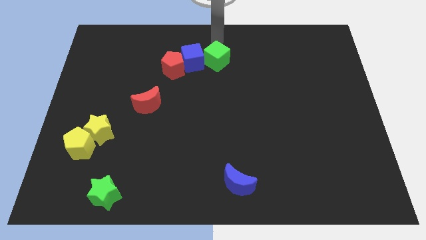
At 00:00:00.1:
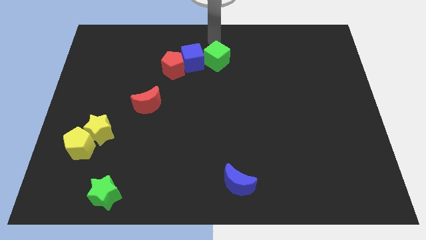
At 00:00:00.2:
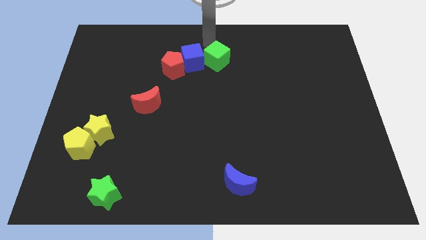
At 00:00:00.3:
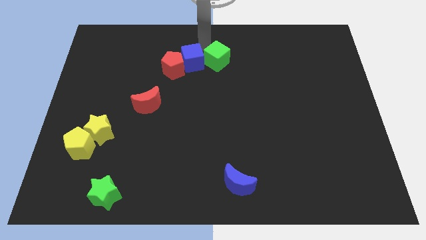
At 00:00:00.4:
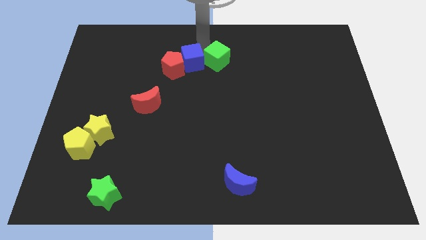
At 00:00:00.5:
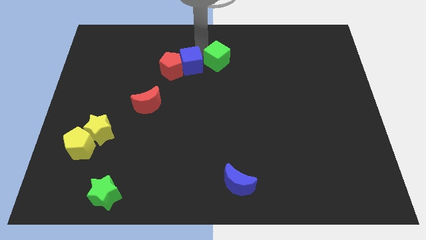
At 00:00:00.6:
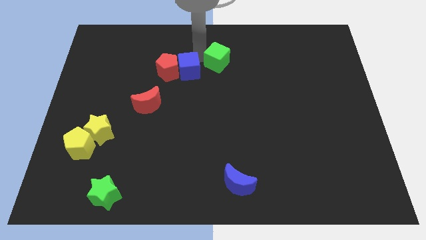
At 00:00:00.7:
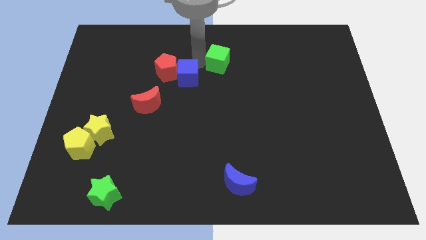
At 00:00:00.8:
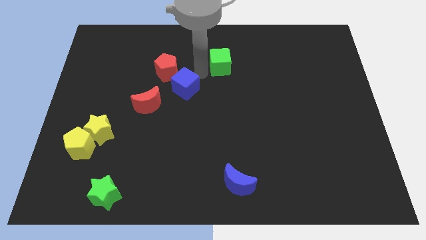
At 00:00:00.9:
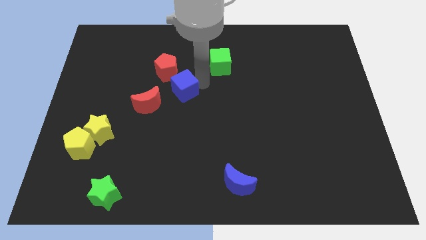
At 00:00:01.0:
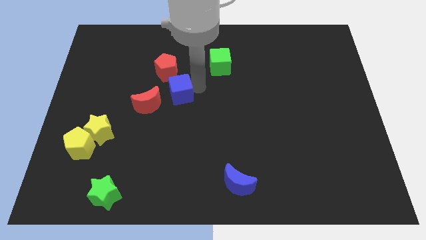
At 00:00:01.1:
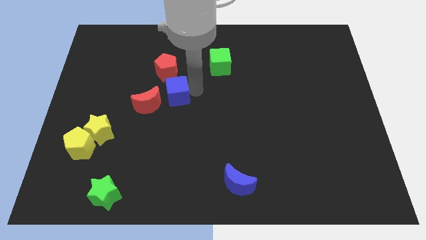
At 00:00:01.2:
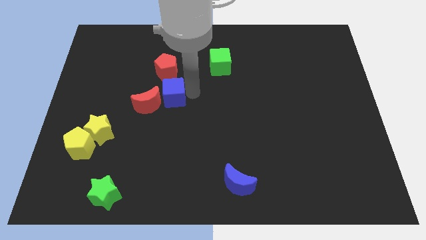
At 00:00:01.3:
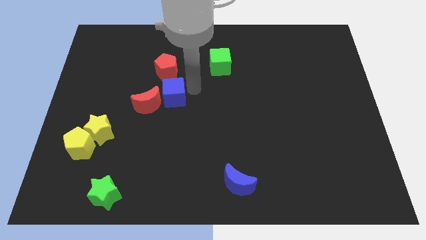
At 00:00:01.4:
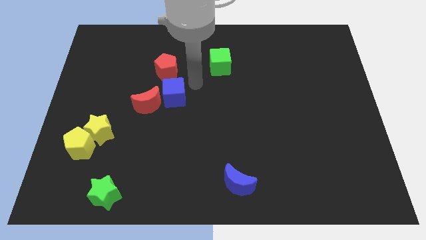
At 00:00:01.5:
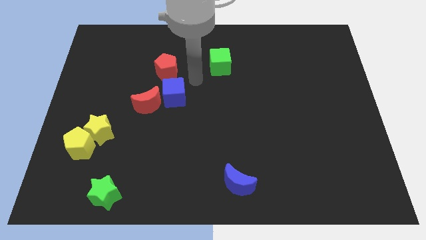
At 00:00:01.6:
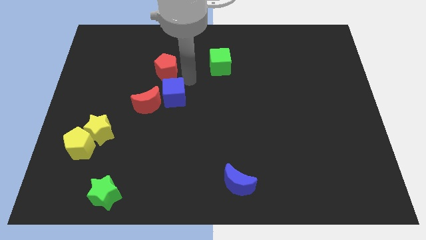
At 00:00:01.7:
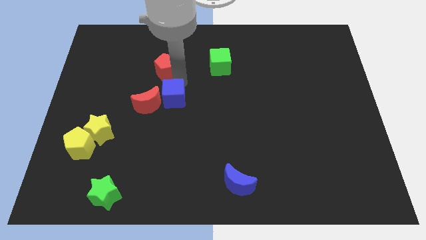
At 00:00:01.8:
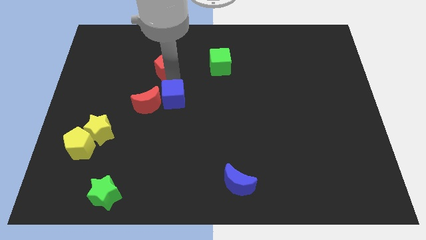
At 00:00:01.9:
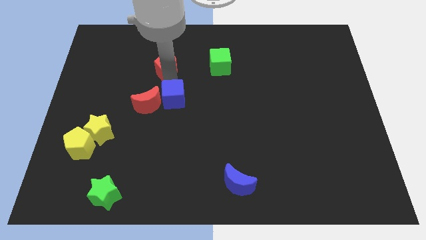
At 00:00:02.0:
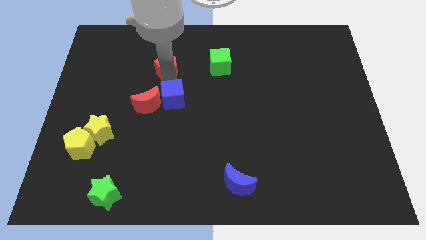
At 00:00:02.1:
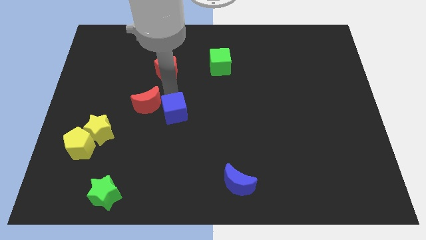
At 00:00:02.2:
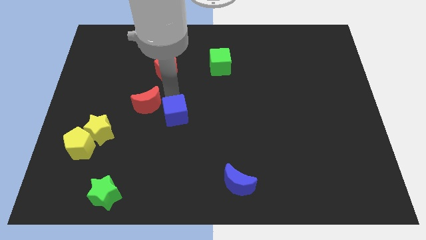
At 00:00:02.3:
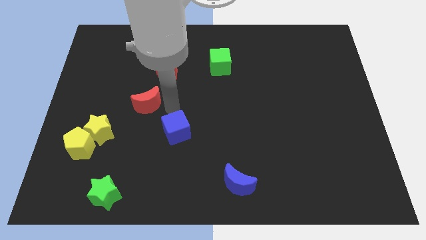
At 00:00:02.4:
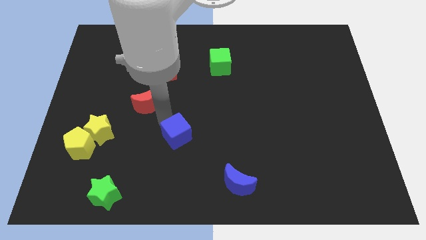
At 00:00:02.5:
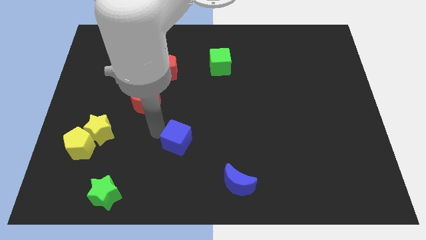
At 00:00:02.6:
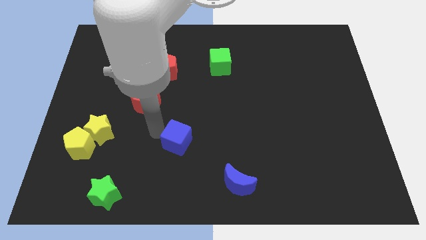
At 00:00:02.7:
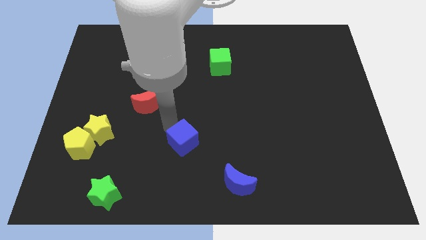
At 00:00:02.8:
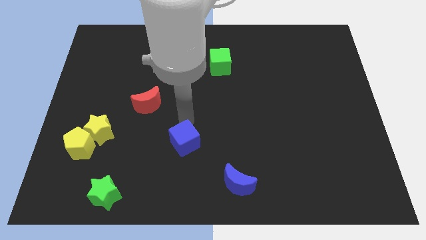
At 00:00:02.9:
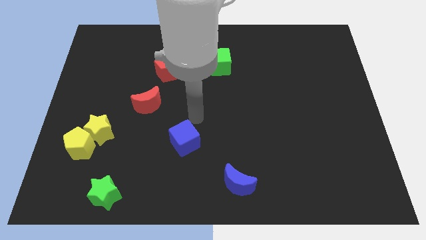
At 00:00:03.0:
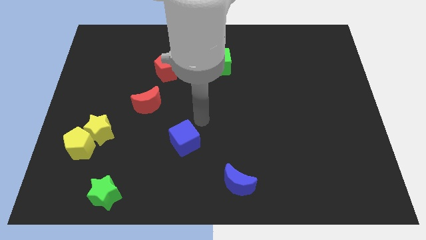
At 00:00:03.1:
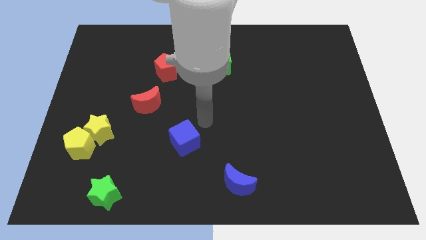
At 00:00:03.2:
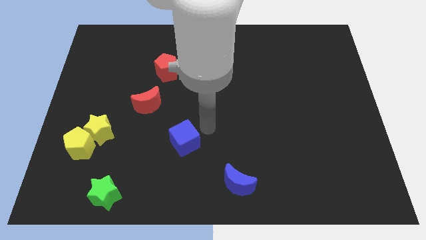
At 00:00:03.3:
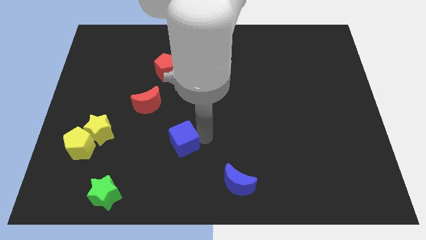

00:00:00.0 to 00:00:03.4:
place the blue cube to the center of the board

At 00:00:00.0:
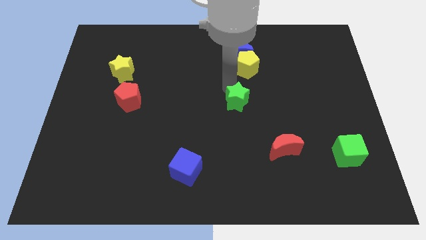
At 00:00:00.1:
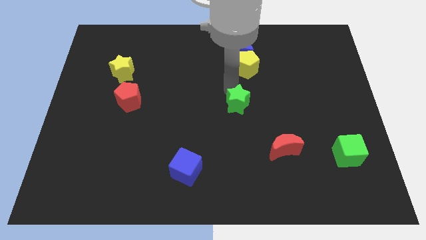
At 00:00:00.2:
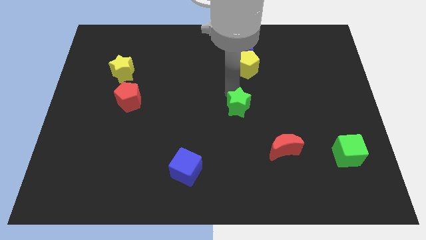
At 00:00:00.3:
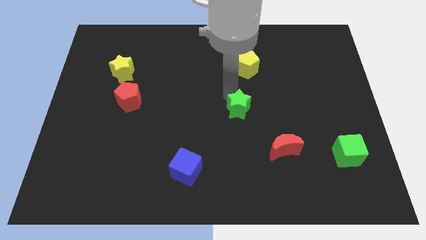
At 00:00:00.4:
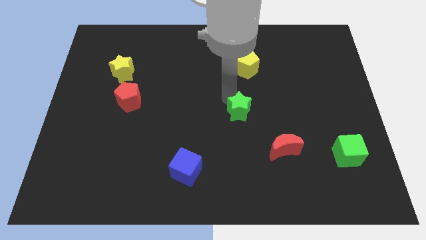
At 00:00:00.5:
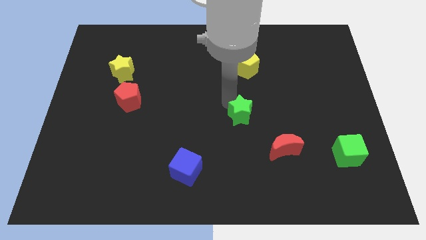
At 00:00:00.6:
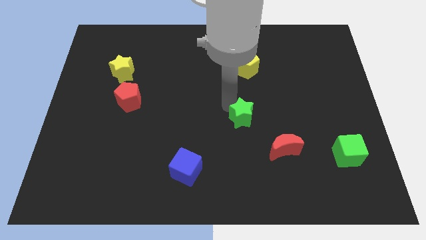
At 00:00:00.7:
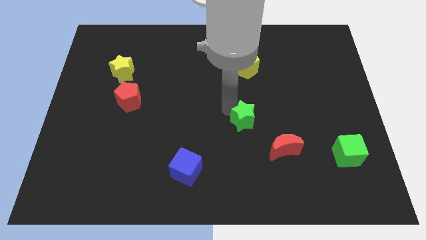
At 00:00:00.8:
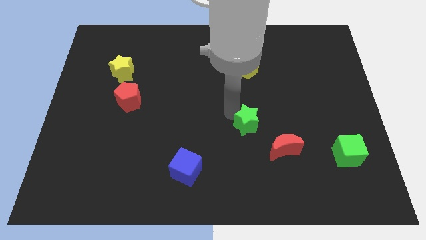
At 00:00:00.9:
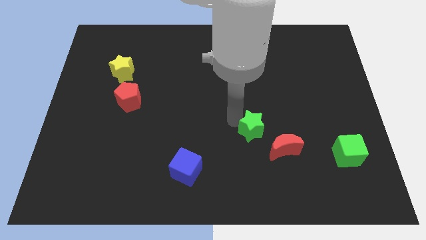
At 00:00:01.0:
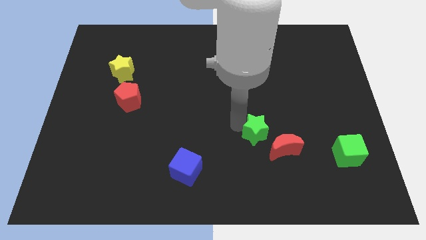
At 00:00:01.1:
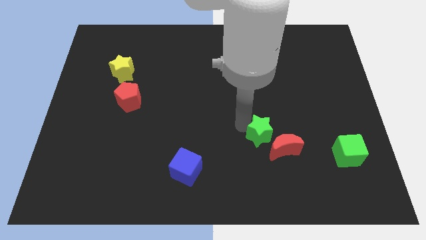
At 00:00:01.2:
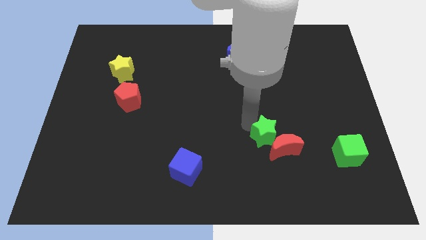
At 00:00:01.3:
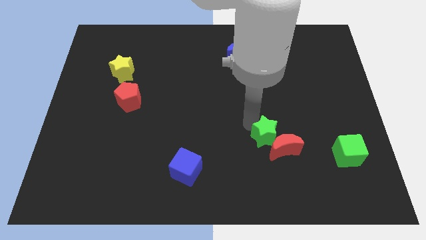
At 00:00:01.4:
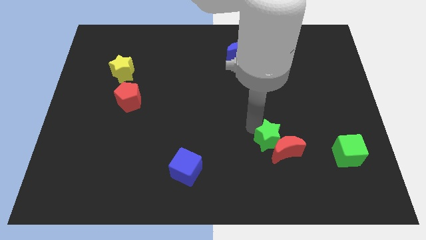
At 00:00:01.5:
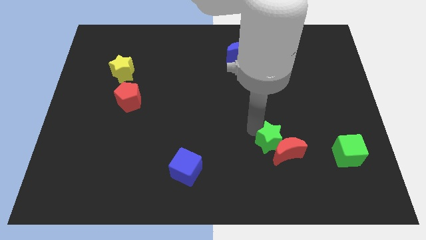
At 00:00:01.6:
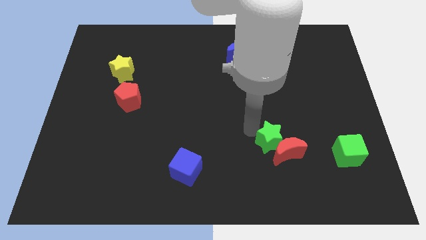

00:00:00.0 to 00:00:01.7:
push the green star into the red crescent to the bottom right

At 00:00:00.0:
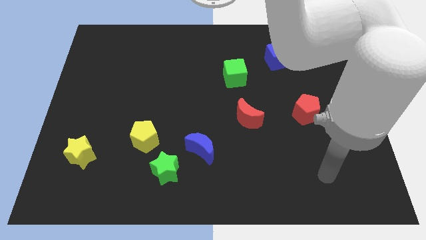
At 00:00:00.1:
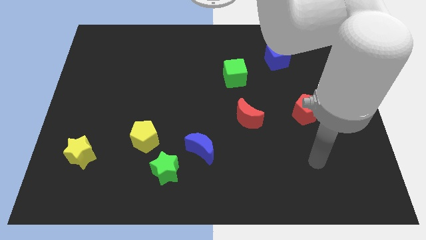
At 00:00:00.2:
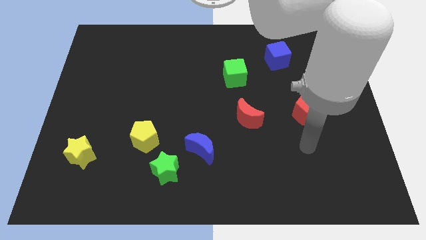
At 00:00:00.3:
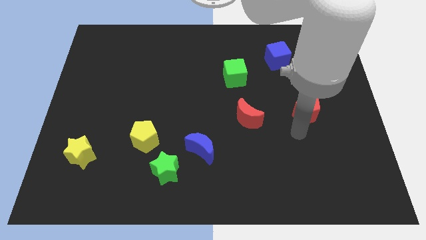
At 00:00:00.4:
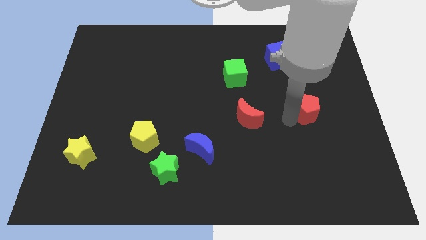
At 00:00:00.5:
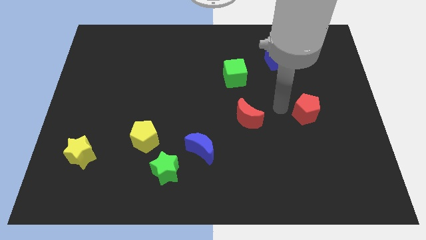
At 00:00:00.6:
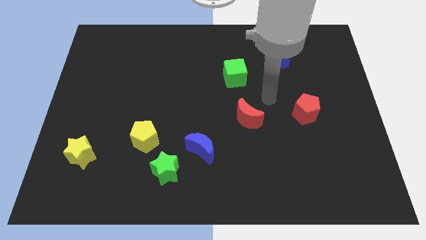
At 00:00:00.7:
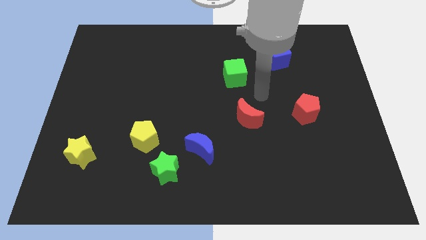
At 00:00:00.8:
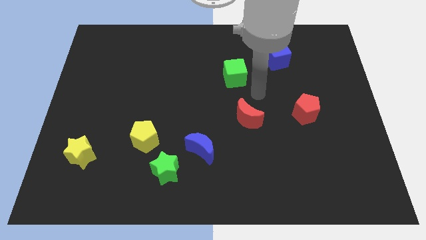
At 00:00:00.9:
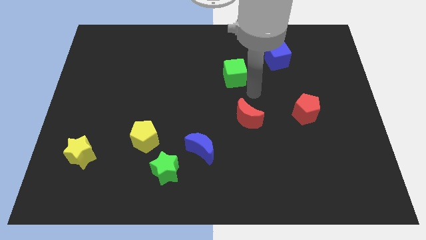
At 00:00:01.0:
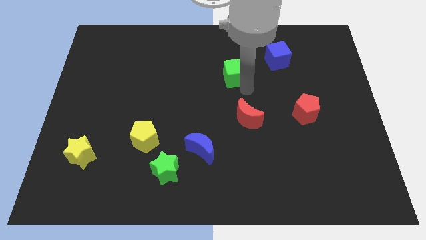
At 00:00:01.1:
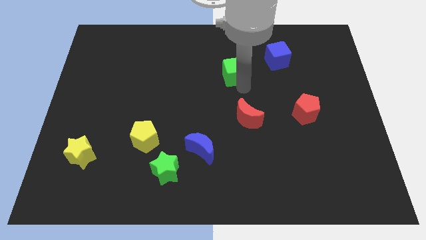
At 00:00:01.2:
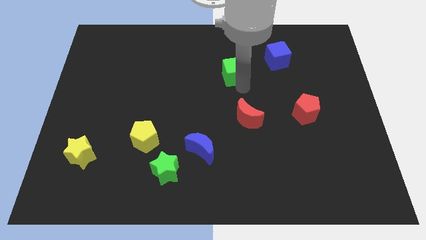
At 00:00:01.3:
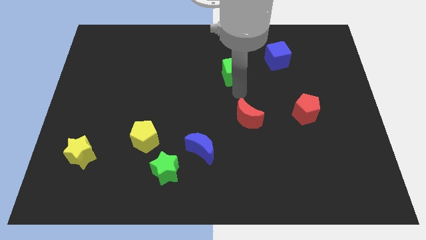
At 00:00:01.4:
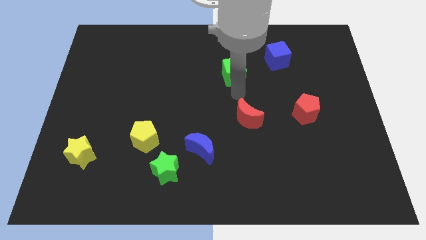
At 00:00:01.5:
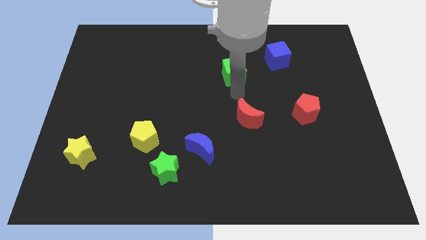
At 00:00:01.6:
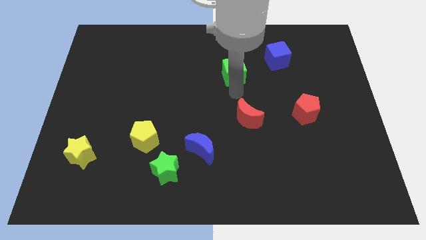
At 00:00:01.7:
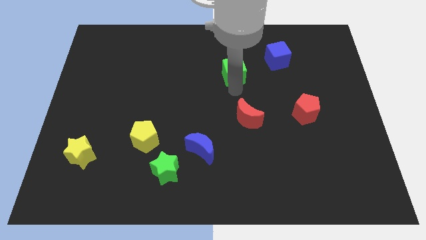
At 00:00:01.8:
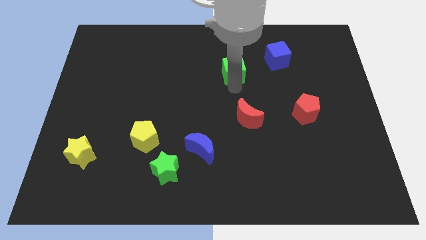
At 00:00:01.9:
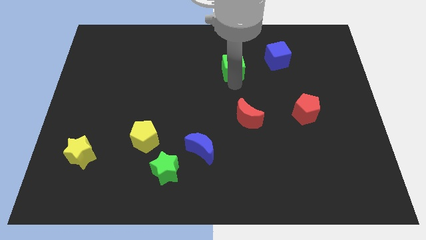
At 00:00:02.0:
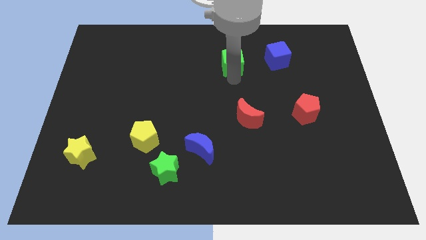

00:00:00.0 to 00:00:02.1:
slightly move green cube towards top

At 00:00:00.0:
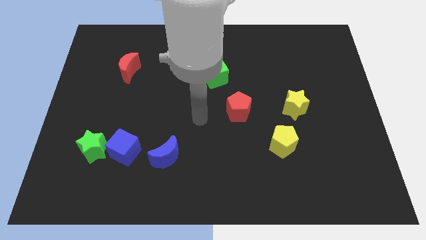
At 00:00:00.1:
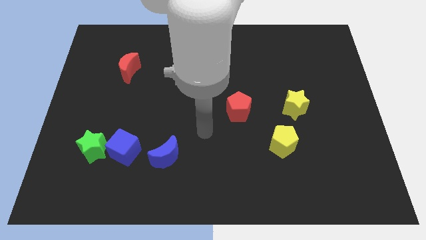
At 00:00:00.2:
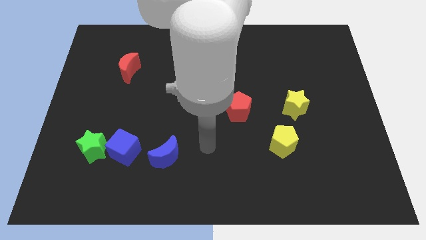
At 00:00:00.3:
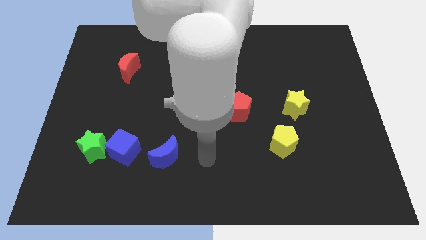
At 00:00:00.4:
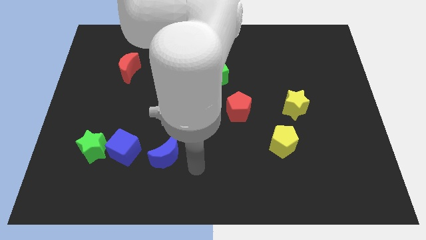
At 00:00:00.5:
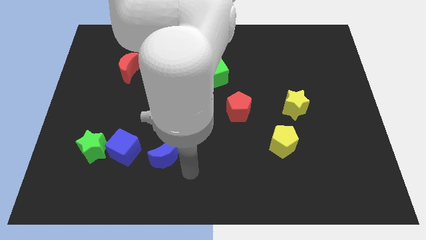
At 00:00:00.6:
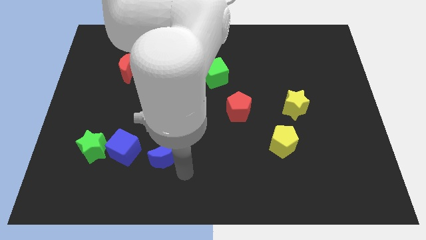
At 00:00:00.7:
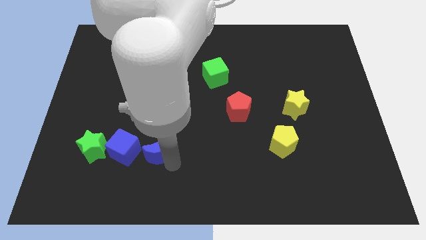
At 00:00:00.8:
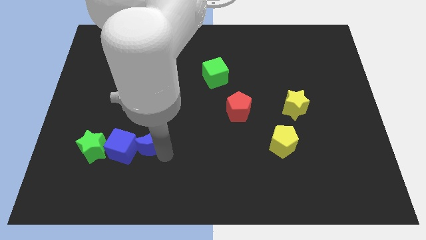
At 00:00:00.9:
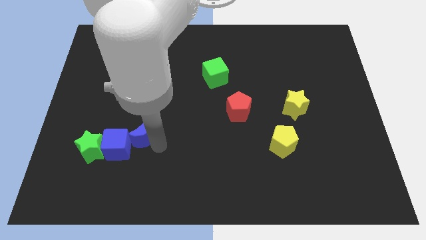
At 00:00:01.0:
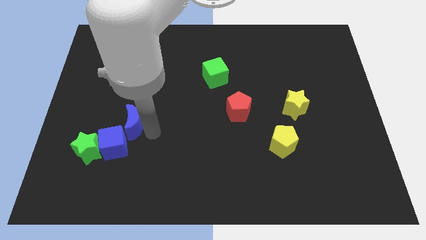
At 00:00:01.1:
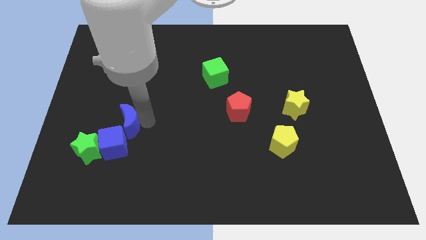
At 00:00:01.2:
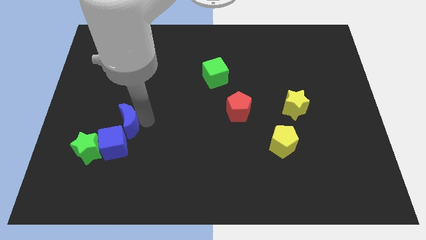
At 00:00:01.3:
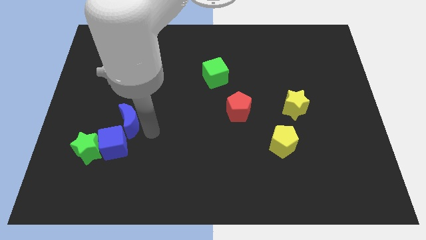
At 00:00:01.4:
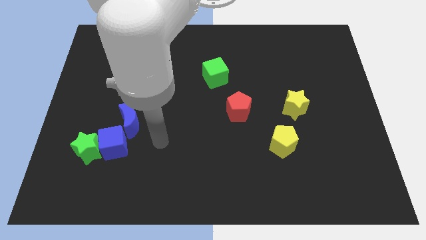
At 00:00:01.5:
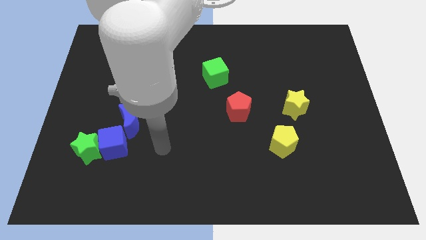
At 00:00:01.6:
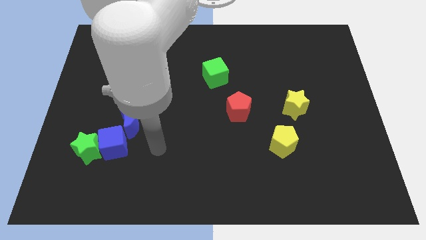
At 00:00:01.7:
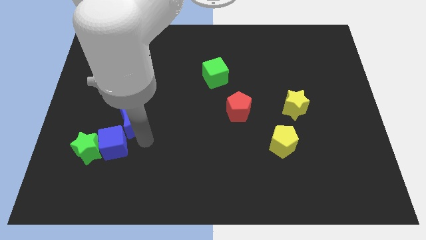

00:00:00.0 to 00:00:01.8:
push the blue cube with the blue moon
